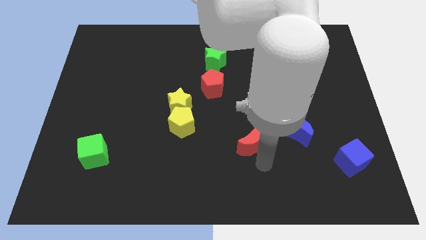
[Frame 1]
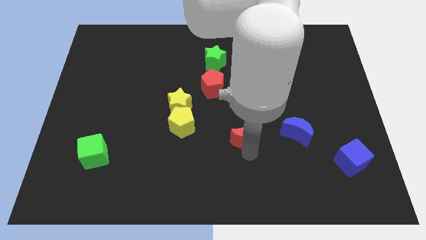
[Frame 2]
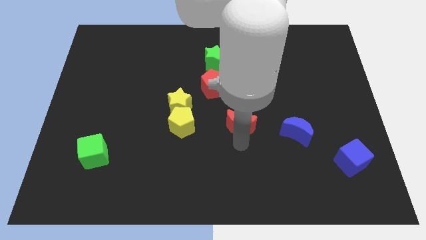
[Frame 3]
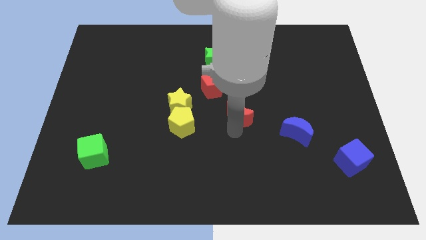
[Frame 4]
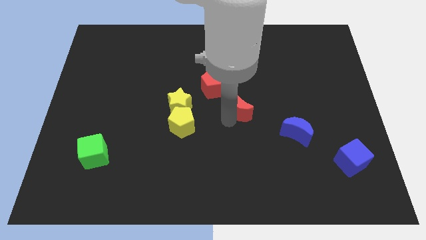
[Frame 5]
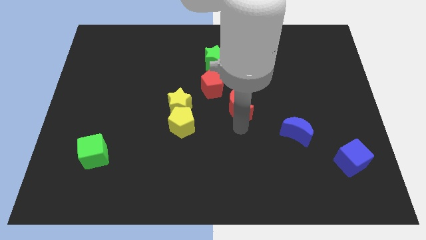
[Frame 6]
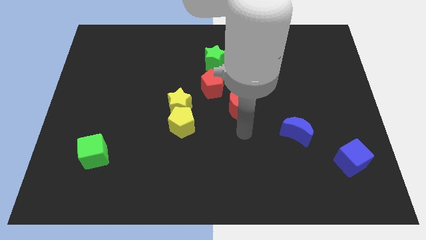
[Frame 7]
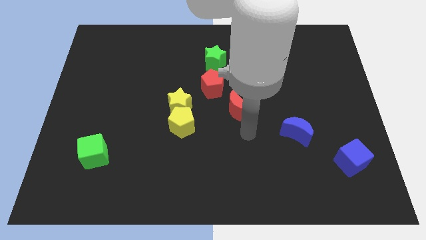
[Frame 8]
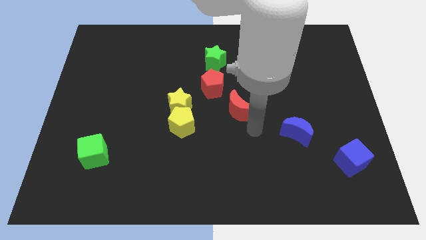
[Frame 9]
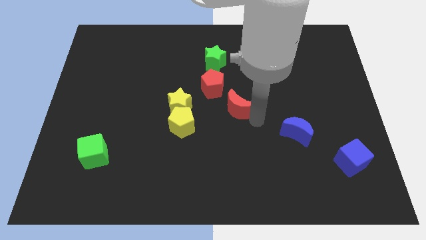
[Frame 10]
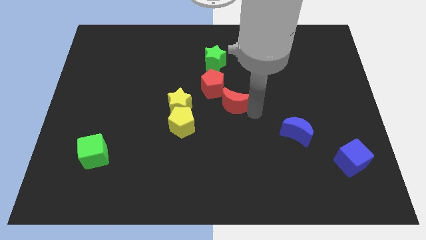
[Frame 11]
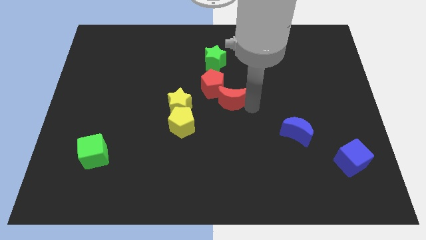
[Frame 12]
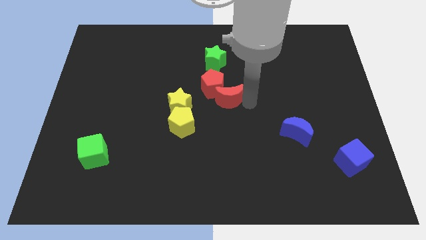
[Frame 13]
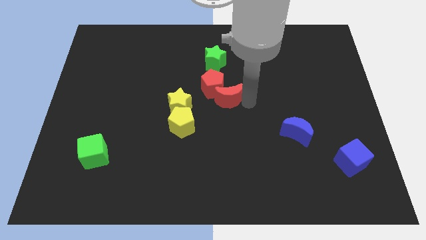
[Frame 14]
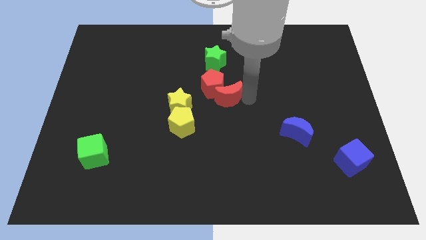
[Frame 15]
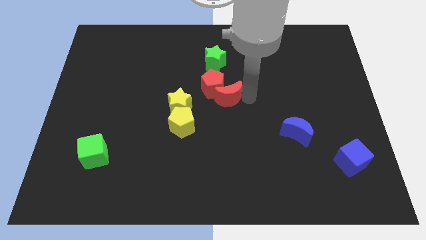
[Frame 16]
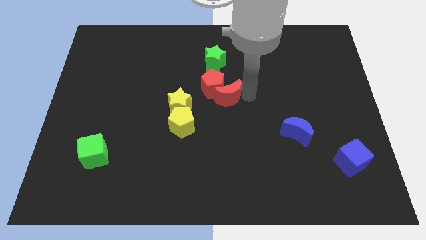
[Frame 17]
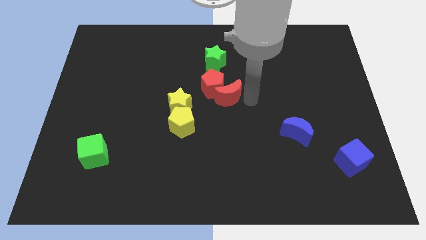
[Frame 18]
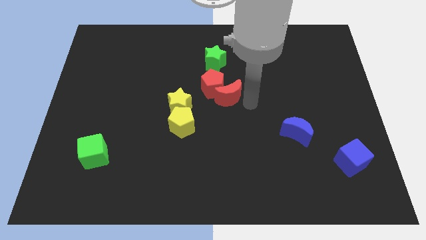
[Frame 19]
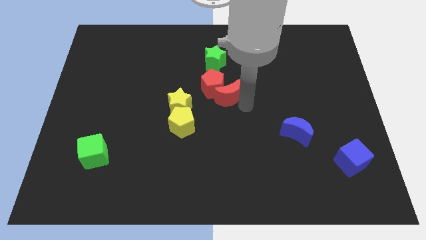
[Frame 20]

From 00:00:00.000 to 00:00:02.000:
move the red moon diagonally bottom right to the green star

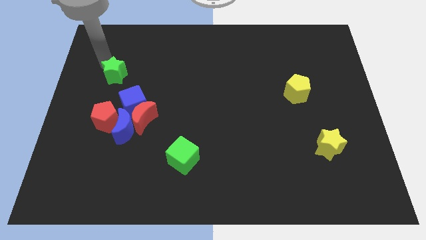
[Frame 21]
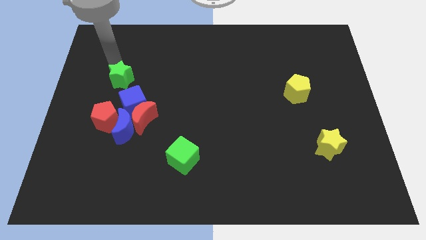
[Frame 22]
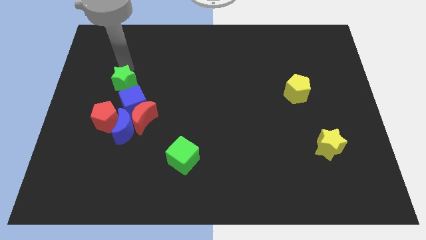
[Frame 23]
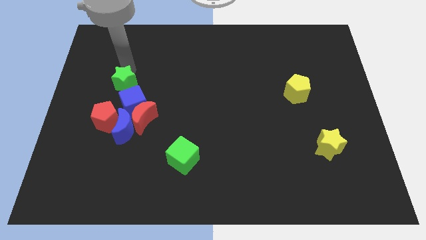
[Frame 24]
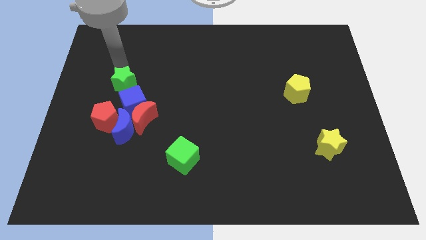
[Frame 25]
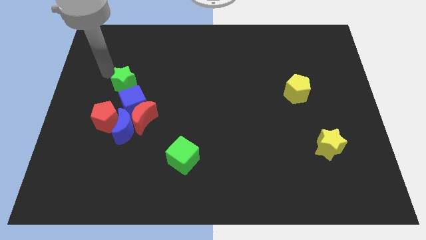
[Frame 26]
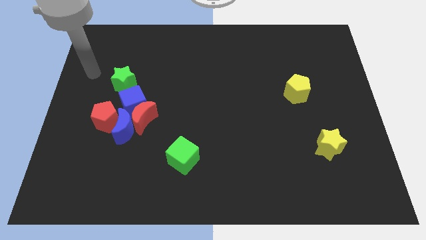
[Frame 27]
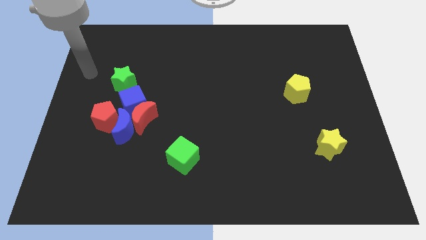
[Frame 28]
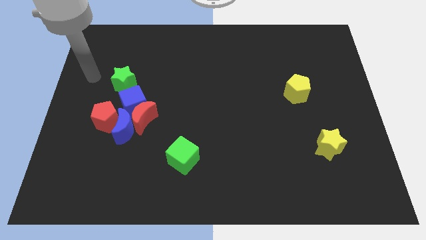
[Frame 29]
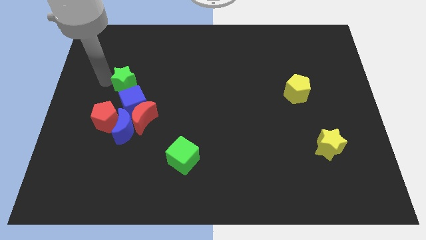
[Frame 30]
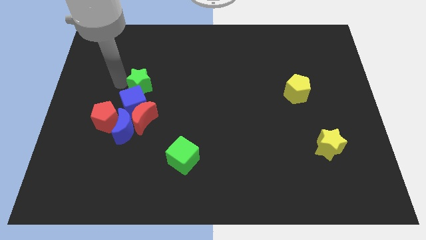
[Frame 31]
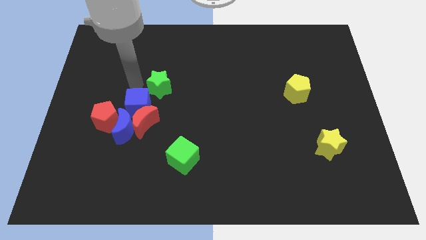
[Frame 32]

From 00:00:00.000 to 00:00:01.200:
place the green star above the blue cube

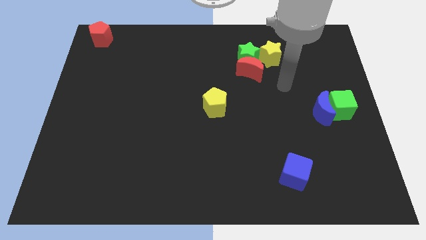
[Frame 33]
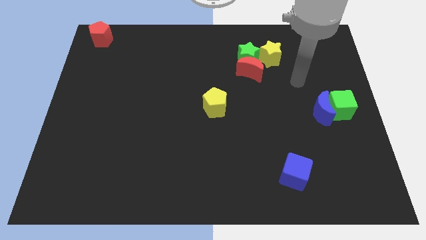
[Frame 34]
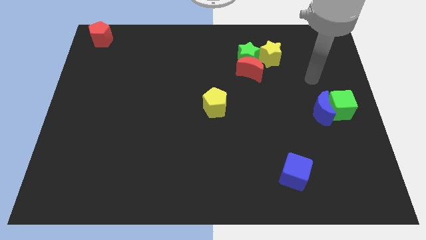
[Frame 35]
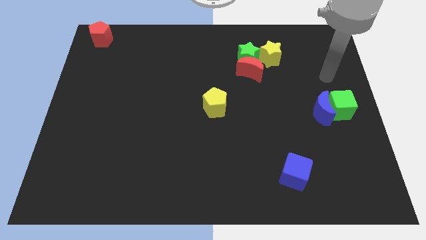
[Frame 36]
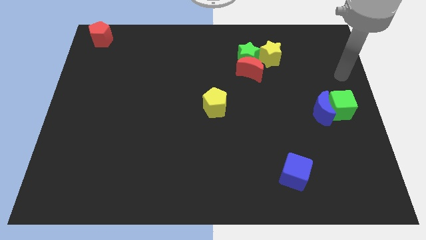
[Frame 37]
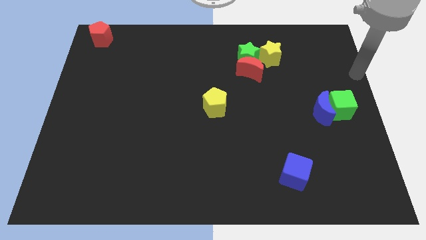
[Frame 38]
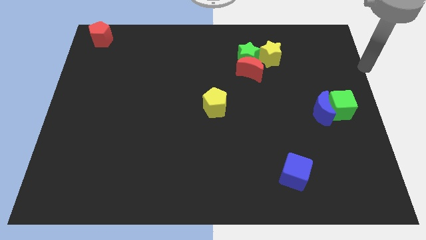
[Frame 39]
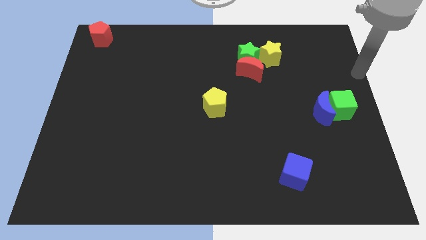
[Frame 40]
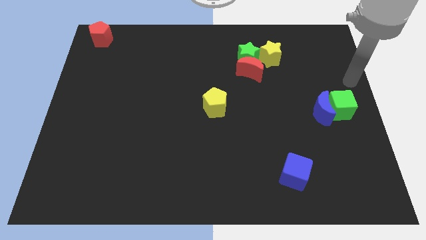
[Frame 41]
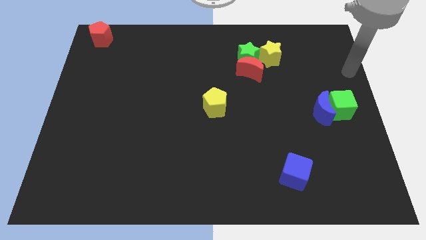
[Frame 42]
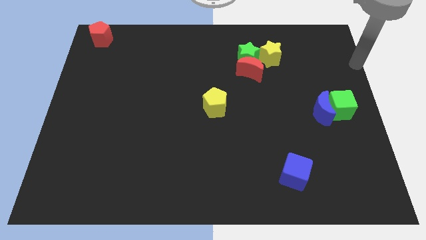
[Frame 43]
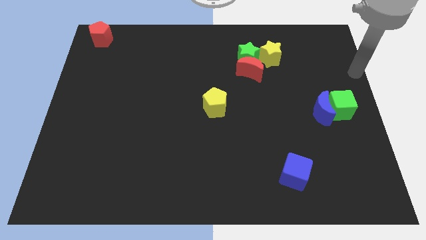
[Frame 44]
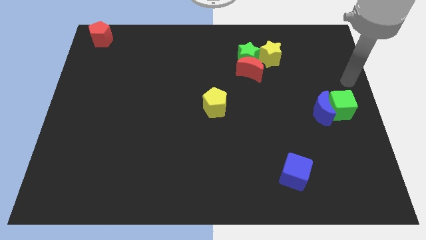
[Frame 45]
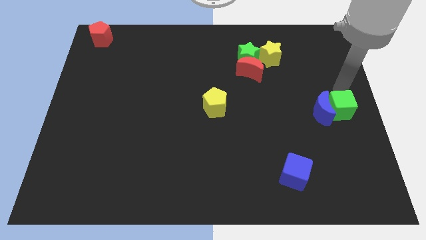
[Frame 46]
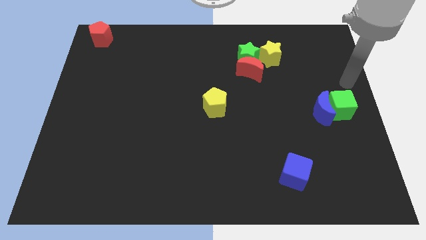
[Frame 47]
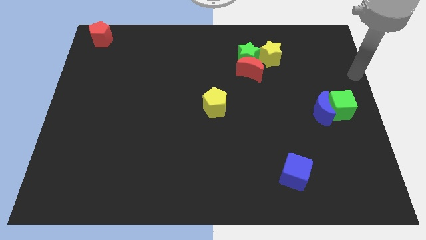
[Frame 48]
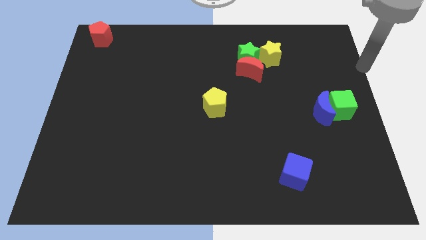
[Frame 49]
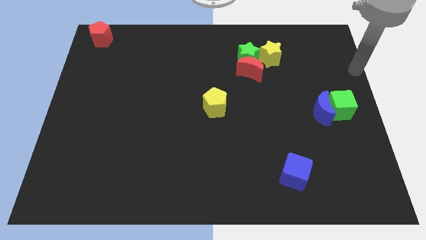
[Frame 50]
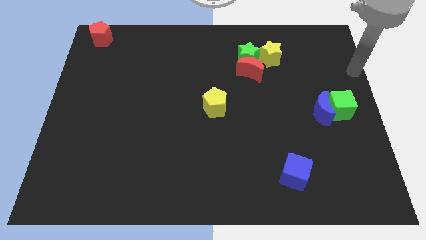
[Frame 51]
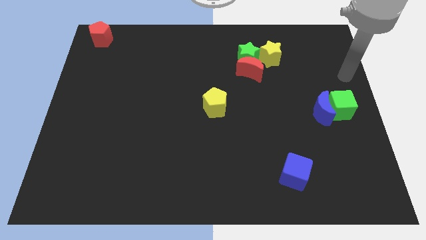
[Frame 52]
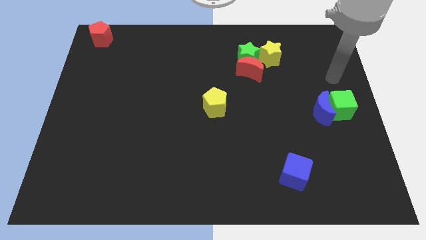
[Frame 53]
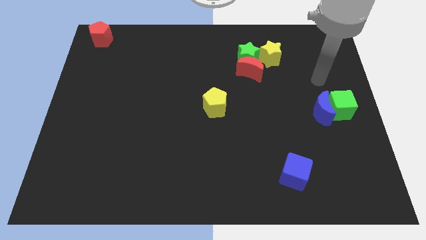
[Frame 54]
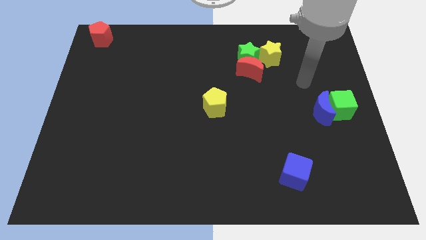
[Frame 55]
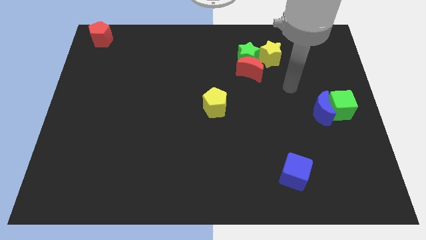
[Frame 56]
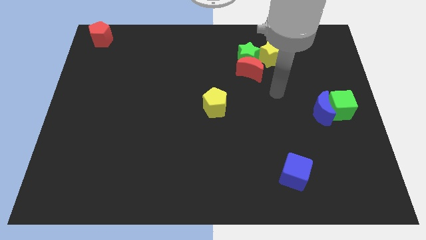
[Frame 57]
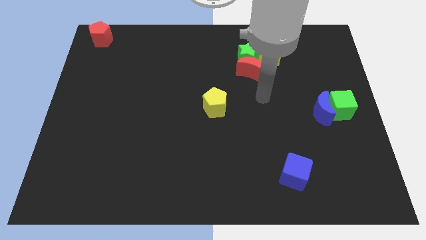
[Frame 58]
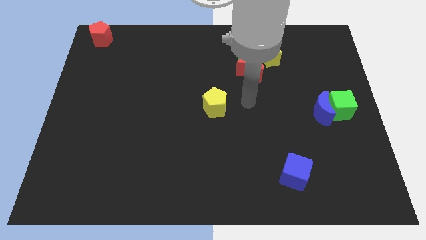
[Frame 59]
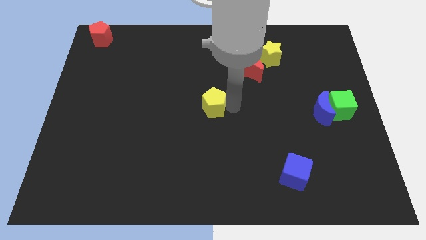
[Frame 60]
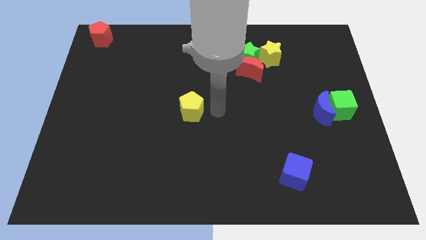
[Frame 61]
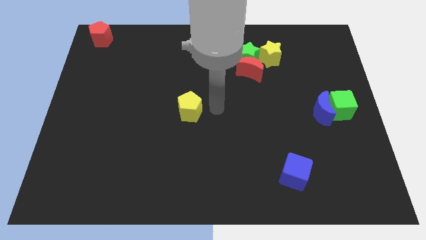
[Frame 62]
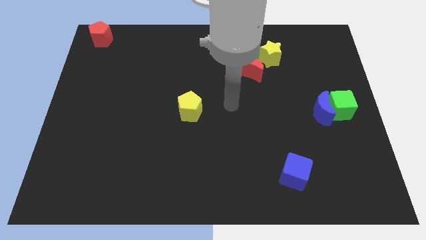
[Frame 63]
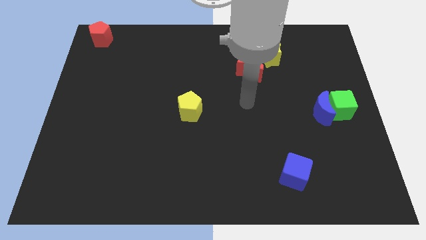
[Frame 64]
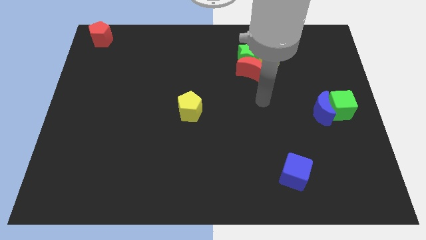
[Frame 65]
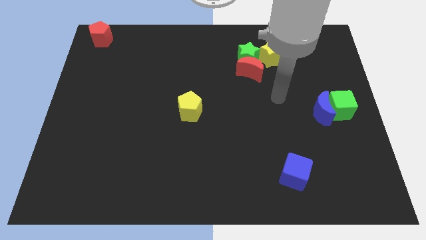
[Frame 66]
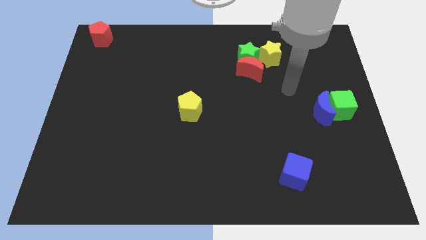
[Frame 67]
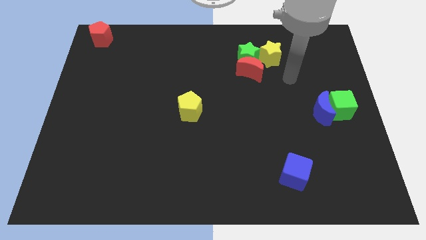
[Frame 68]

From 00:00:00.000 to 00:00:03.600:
place the yellow pentagon to the center of the board

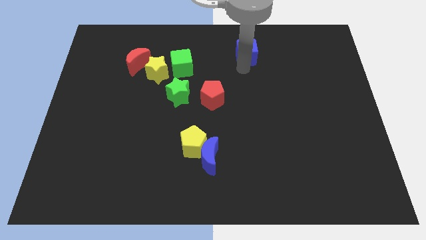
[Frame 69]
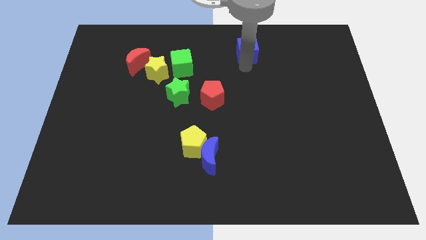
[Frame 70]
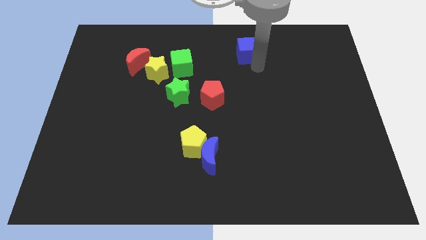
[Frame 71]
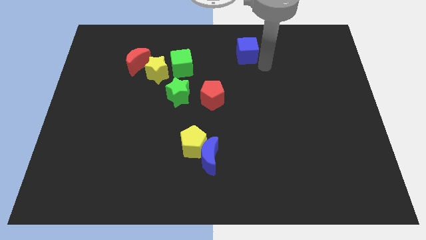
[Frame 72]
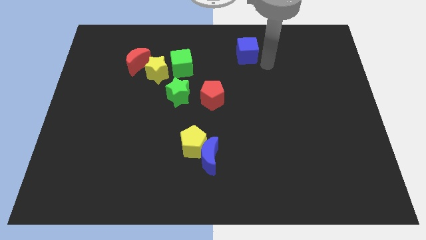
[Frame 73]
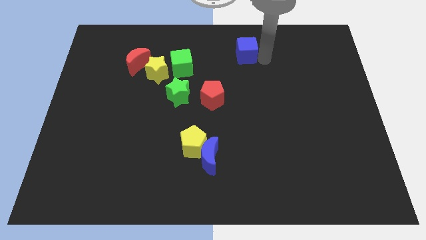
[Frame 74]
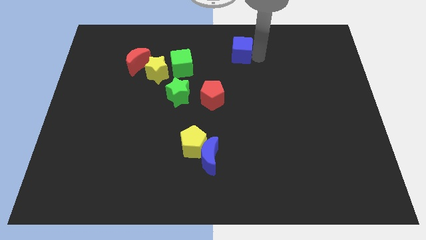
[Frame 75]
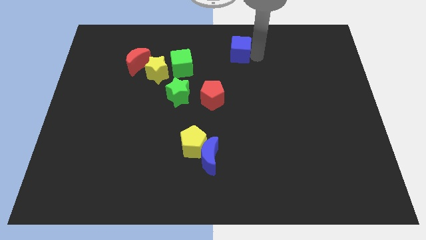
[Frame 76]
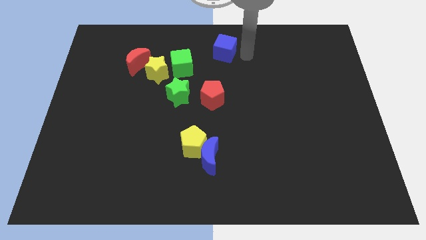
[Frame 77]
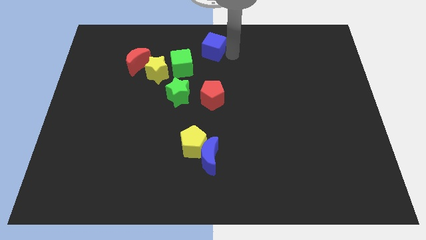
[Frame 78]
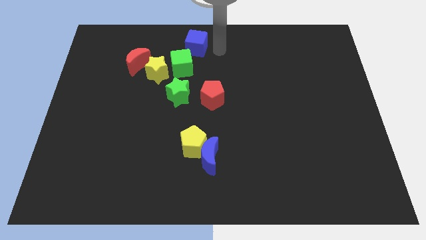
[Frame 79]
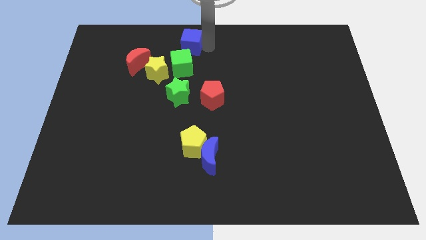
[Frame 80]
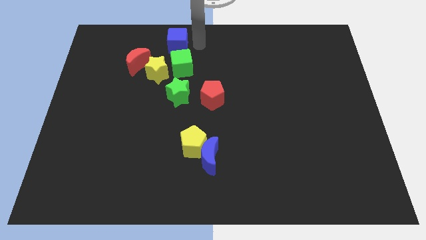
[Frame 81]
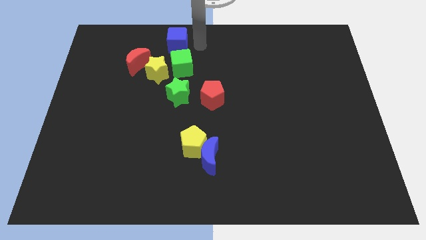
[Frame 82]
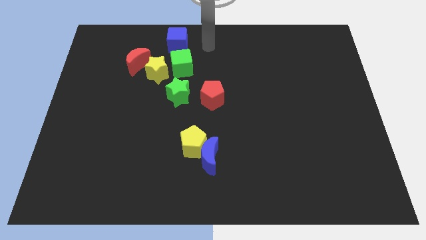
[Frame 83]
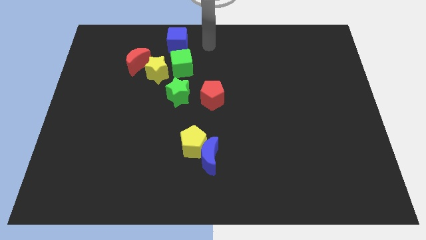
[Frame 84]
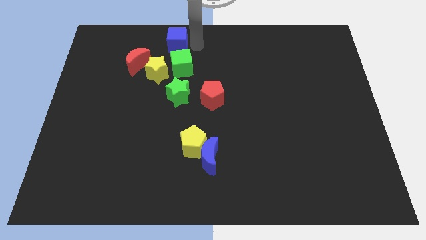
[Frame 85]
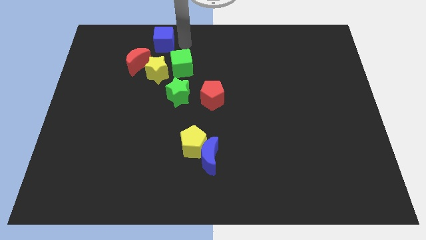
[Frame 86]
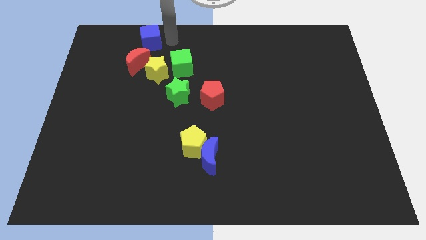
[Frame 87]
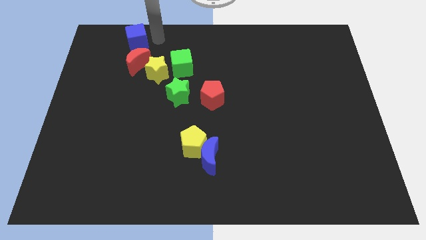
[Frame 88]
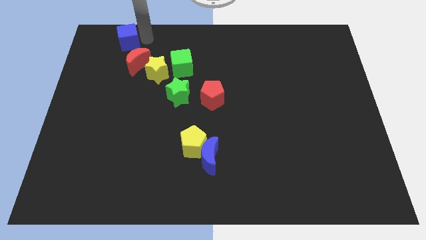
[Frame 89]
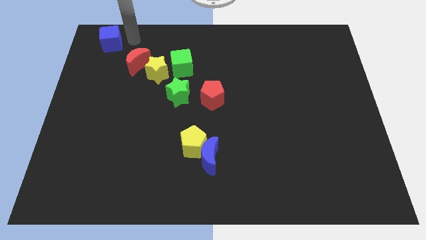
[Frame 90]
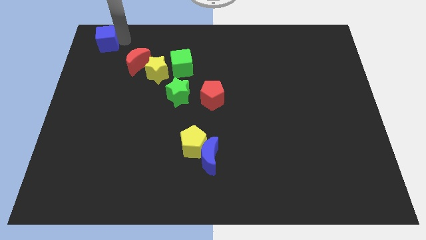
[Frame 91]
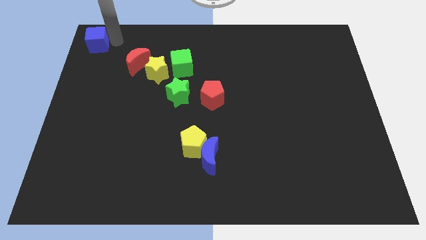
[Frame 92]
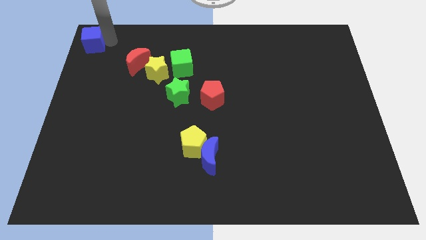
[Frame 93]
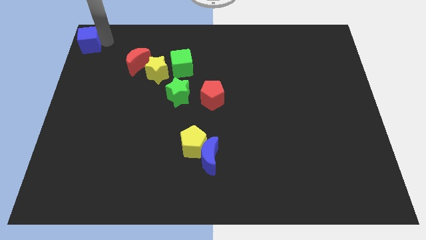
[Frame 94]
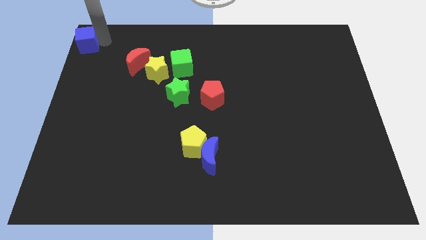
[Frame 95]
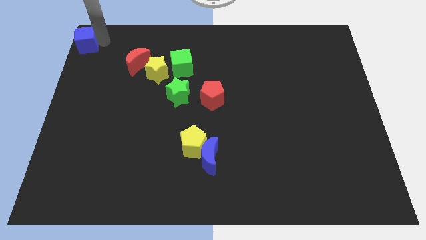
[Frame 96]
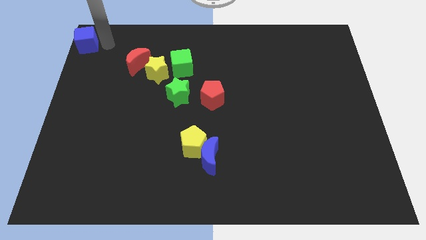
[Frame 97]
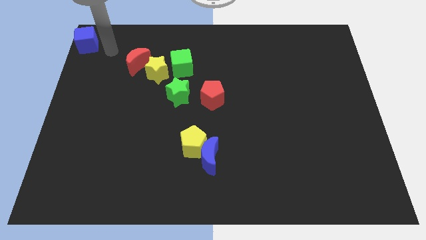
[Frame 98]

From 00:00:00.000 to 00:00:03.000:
move the blue cube at the top left side of the red moon
